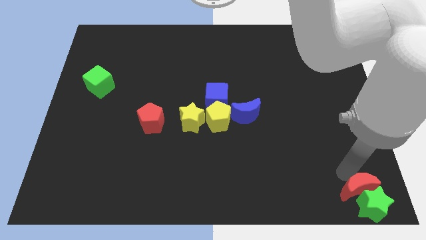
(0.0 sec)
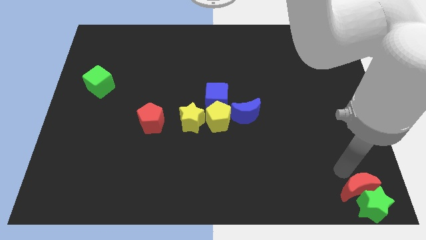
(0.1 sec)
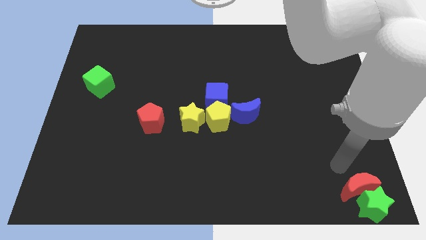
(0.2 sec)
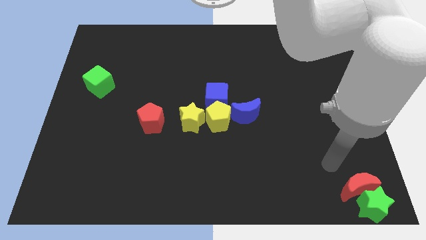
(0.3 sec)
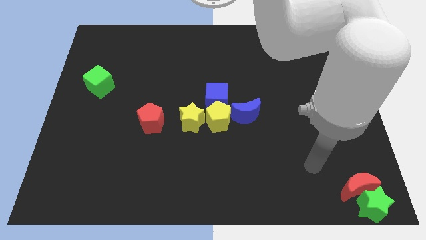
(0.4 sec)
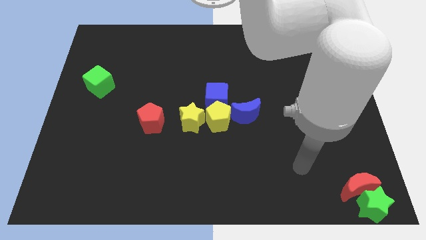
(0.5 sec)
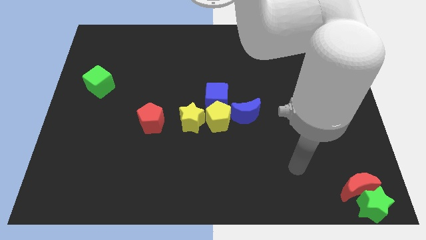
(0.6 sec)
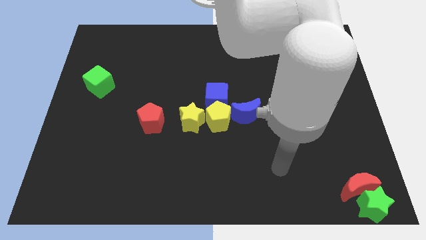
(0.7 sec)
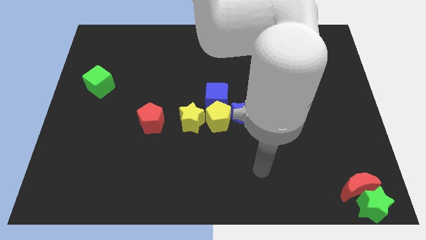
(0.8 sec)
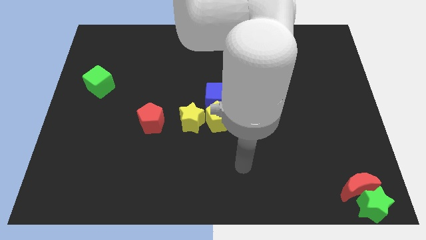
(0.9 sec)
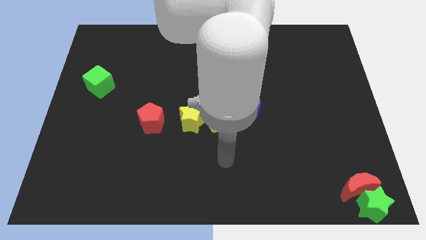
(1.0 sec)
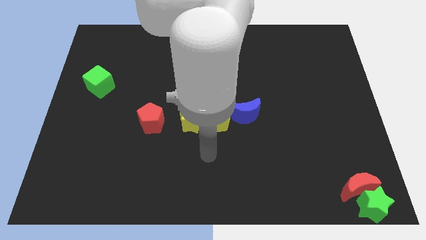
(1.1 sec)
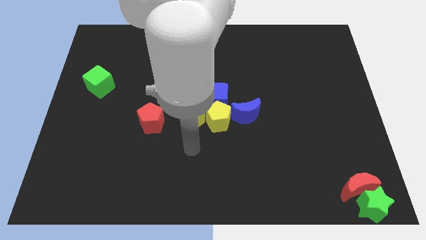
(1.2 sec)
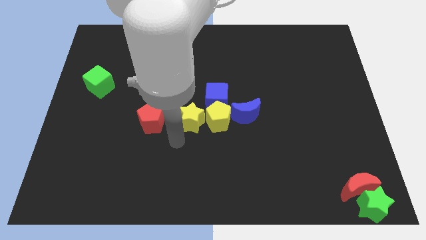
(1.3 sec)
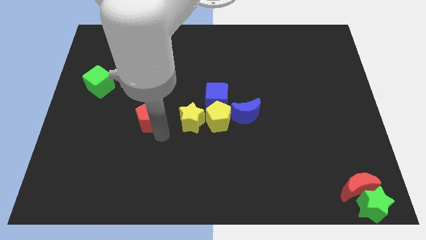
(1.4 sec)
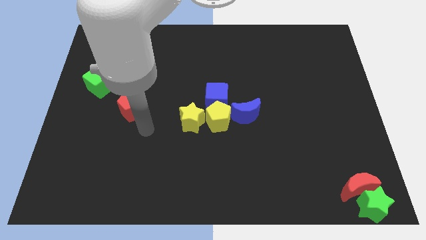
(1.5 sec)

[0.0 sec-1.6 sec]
move yourself away from the red moon

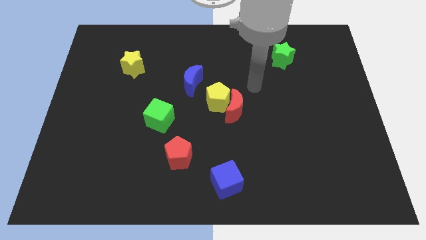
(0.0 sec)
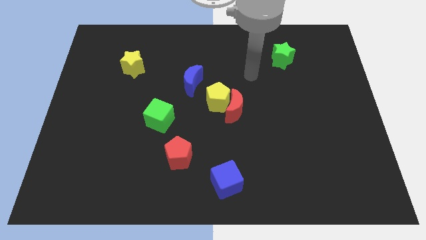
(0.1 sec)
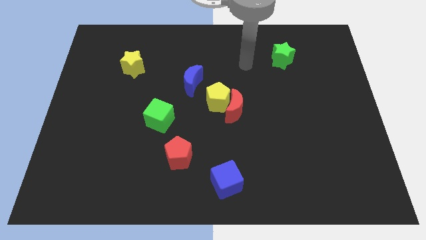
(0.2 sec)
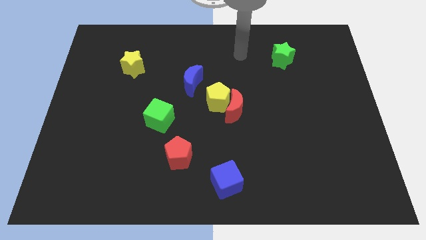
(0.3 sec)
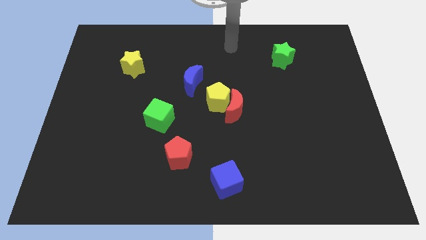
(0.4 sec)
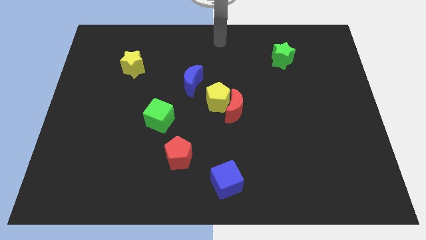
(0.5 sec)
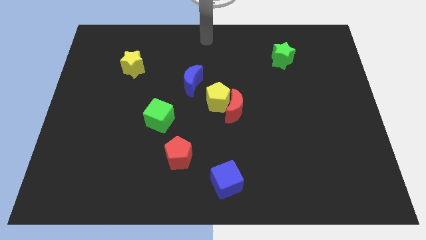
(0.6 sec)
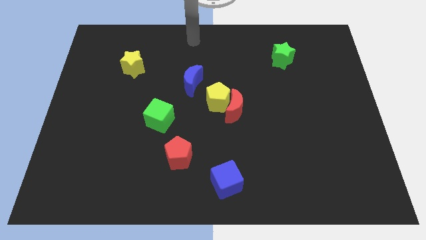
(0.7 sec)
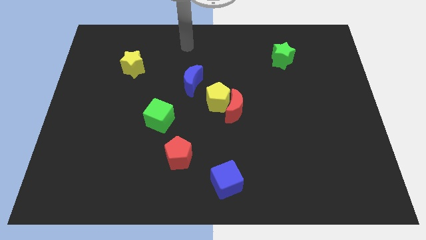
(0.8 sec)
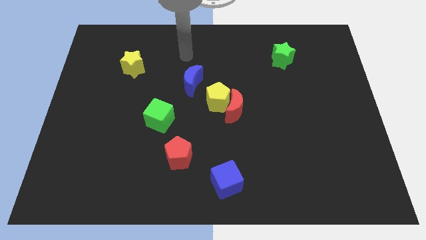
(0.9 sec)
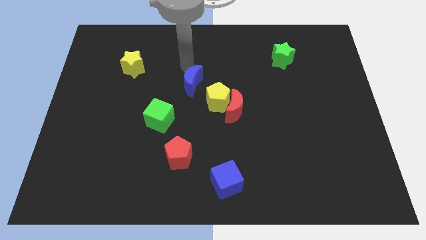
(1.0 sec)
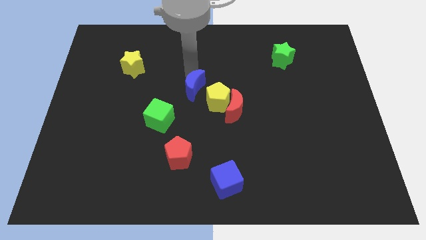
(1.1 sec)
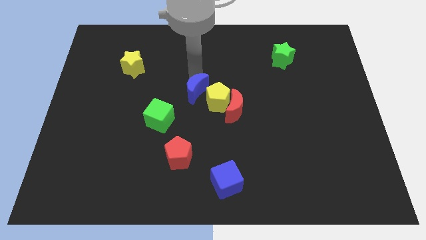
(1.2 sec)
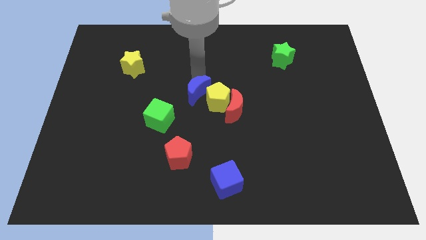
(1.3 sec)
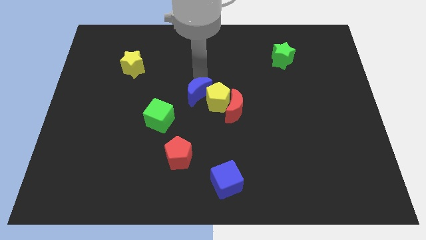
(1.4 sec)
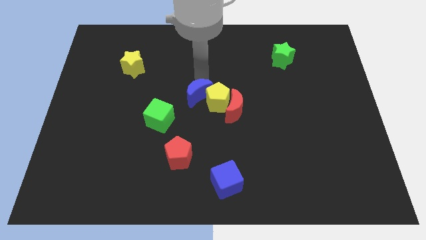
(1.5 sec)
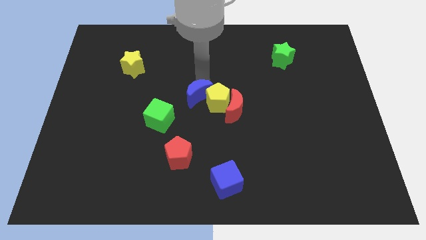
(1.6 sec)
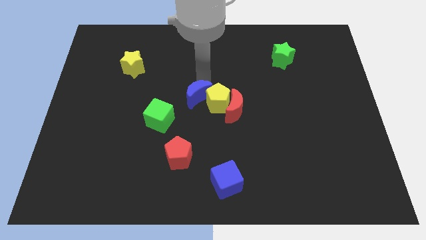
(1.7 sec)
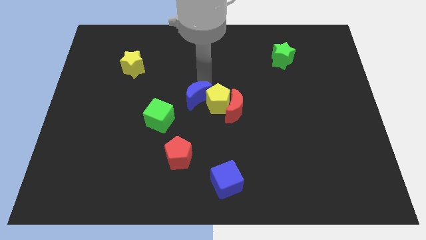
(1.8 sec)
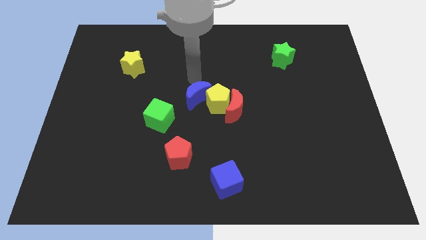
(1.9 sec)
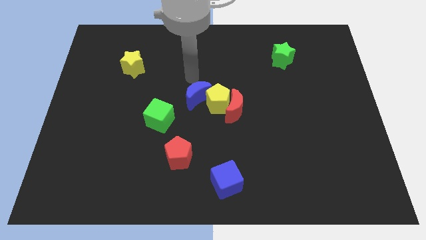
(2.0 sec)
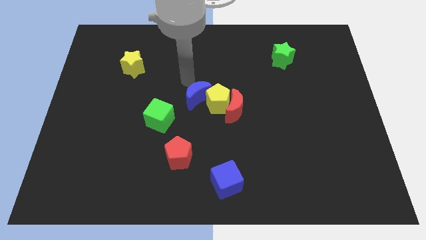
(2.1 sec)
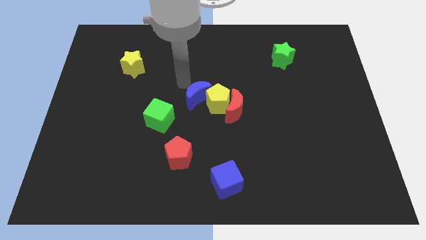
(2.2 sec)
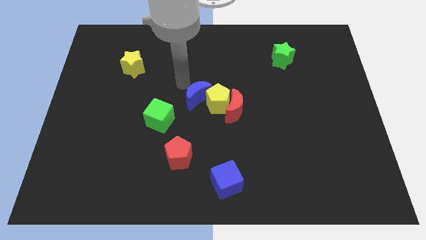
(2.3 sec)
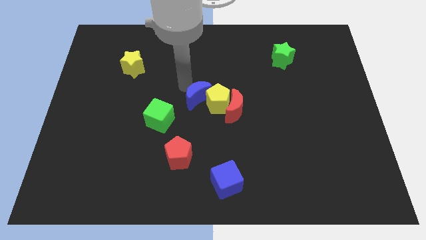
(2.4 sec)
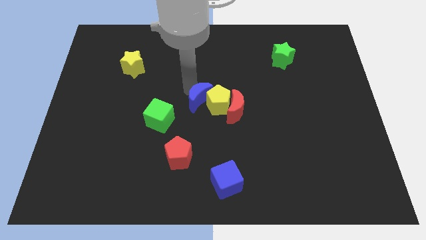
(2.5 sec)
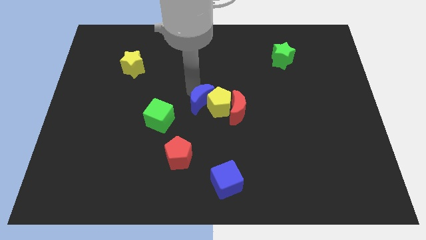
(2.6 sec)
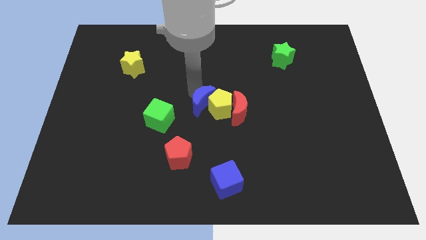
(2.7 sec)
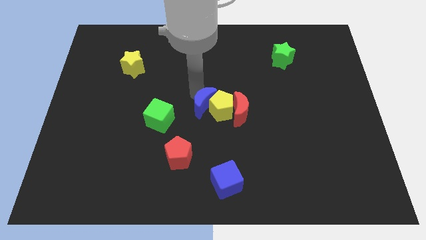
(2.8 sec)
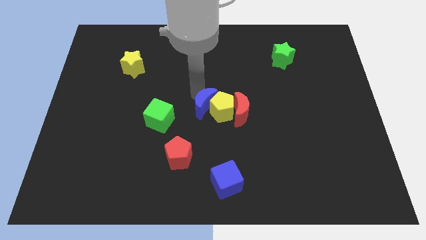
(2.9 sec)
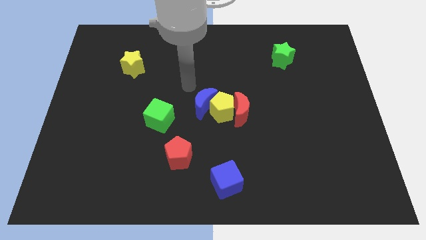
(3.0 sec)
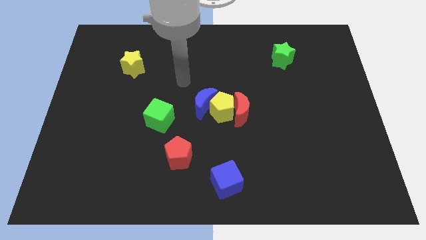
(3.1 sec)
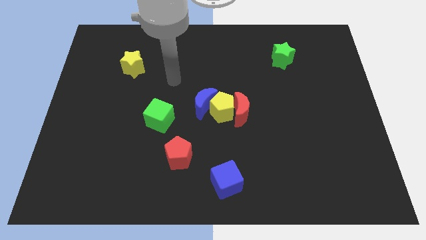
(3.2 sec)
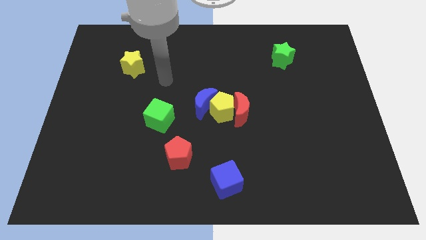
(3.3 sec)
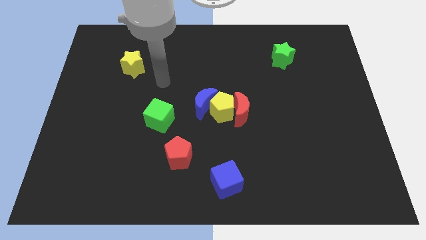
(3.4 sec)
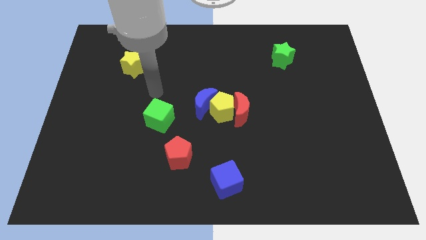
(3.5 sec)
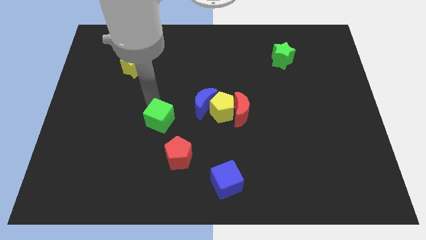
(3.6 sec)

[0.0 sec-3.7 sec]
push the blue moon into the yellow pentagon

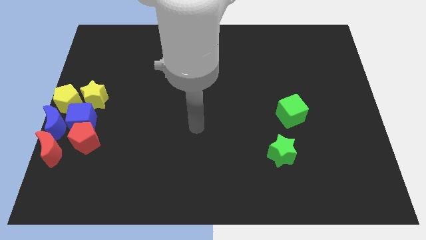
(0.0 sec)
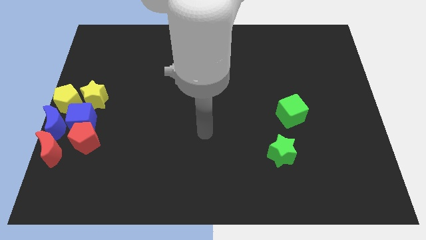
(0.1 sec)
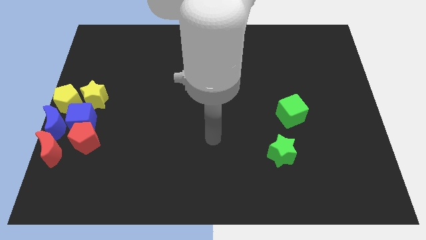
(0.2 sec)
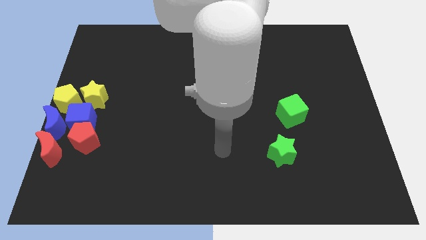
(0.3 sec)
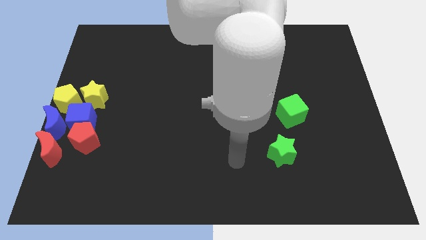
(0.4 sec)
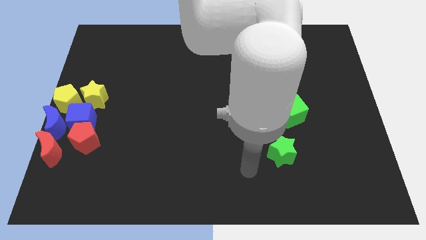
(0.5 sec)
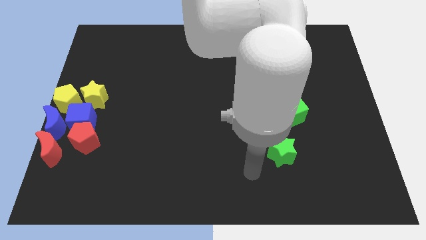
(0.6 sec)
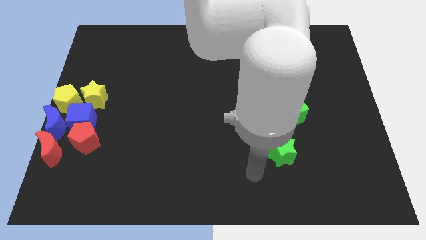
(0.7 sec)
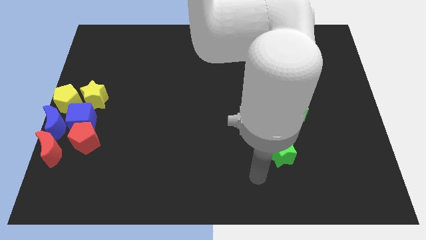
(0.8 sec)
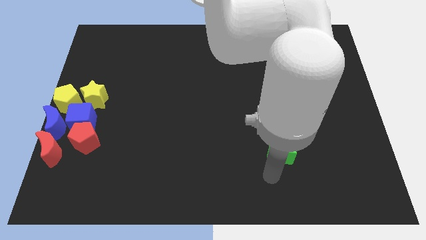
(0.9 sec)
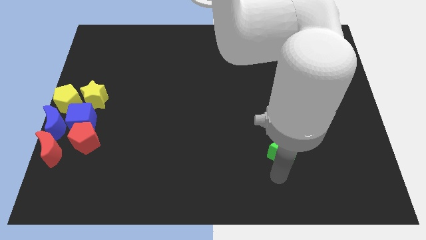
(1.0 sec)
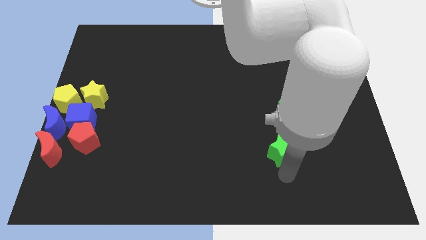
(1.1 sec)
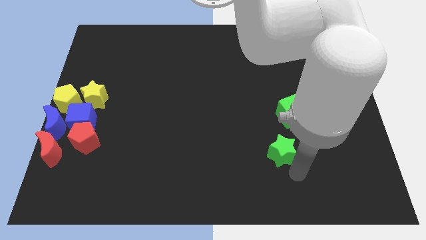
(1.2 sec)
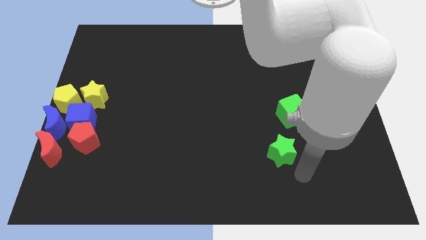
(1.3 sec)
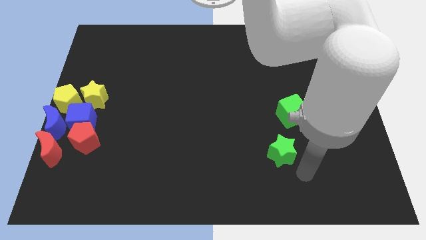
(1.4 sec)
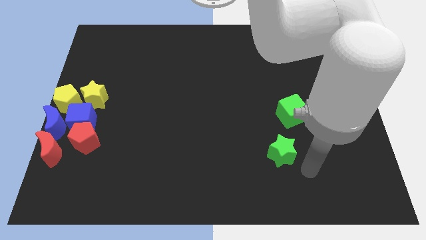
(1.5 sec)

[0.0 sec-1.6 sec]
push your hand at the bottom right side of the green star

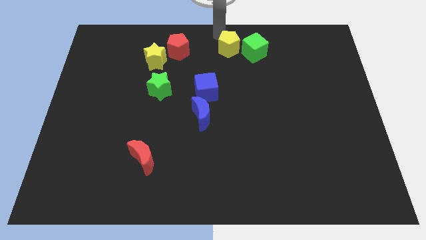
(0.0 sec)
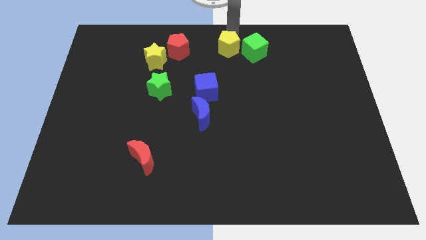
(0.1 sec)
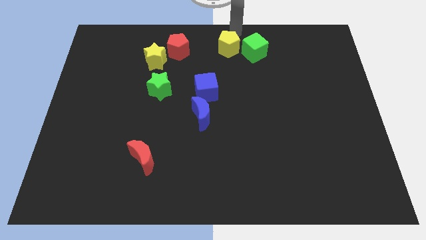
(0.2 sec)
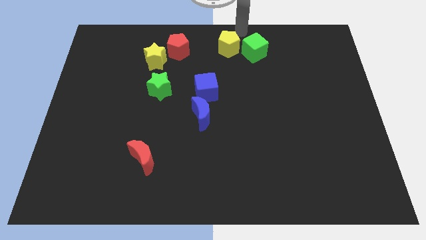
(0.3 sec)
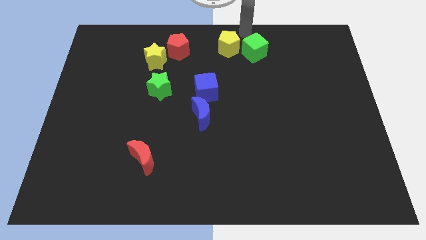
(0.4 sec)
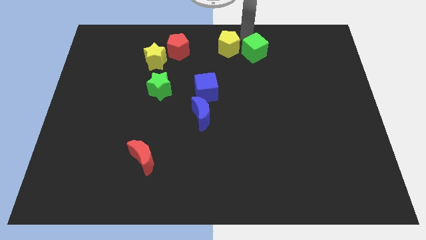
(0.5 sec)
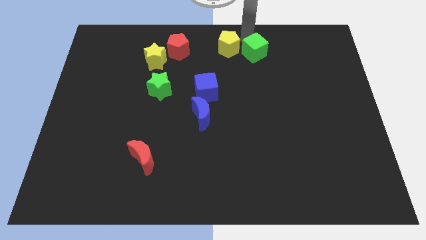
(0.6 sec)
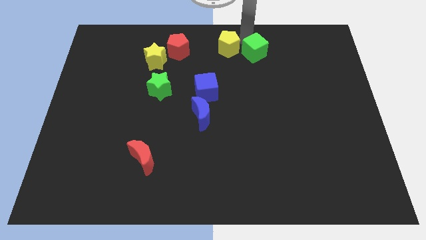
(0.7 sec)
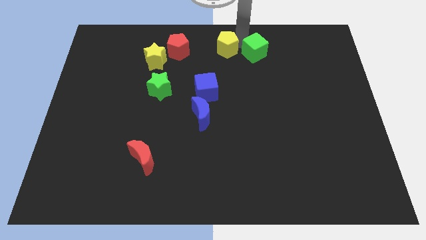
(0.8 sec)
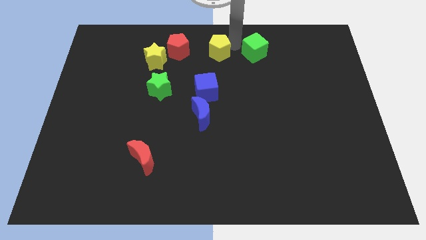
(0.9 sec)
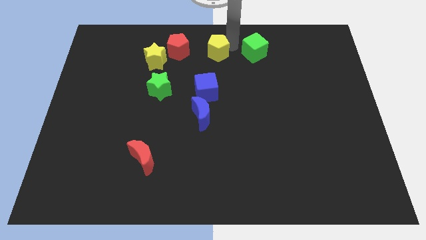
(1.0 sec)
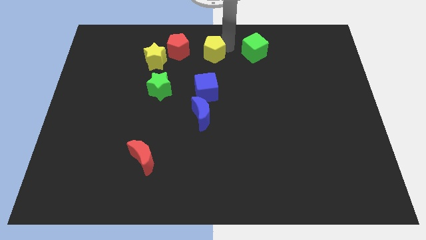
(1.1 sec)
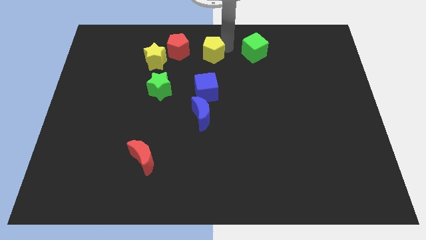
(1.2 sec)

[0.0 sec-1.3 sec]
place yellow pentagon above blue cube

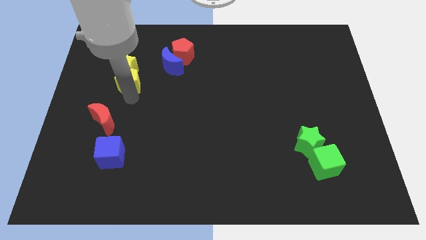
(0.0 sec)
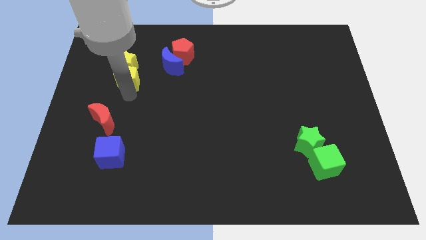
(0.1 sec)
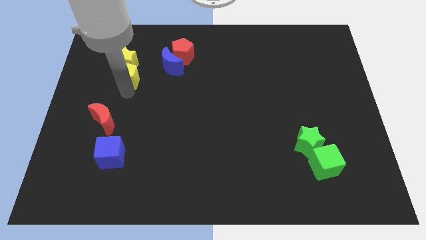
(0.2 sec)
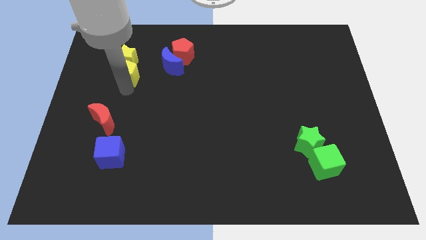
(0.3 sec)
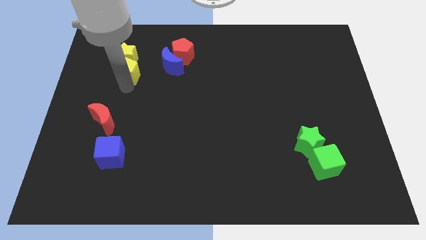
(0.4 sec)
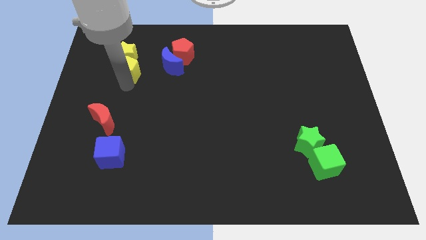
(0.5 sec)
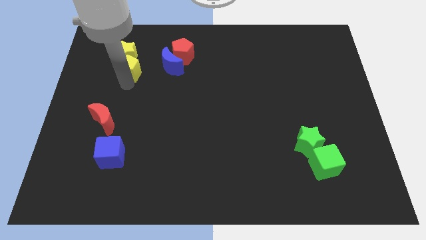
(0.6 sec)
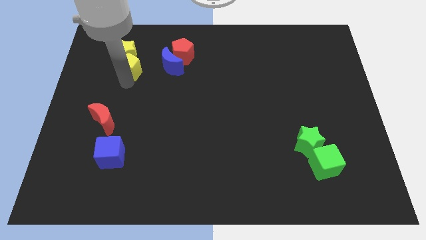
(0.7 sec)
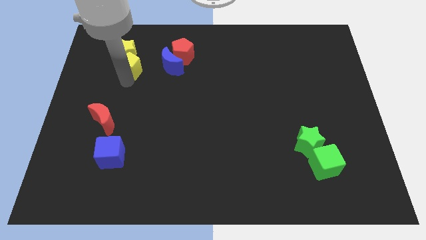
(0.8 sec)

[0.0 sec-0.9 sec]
push the yellow star with the yellow pentagon
